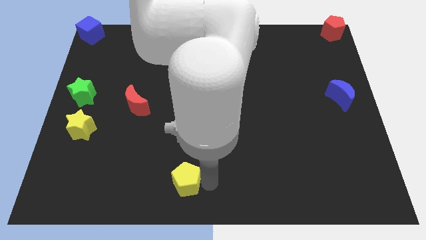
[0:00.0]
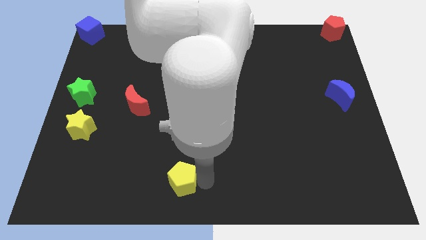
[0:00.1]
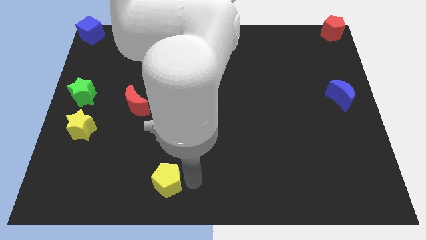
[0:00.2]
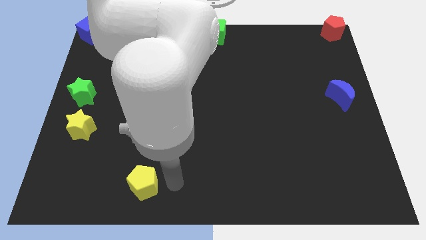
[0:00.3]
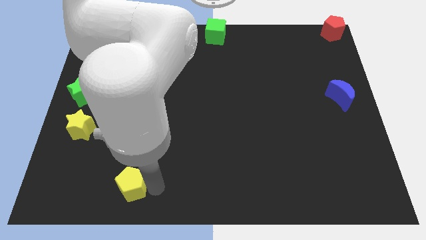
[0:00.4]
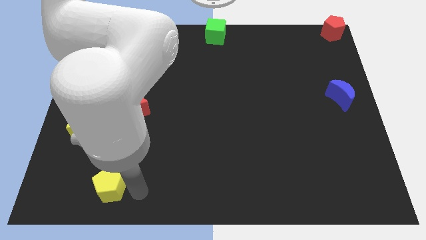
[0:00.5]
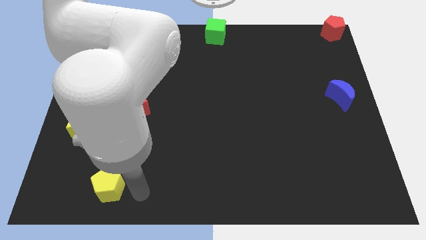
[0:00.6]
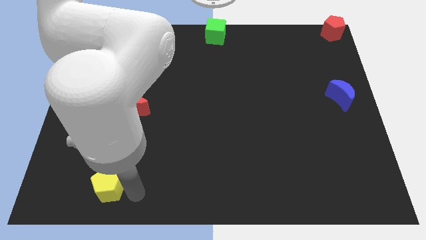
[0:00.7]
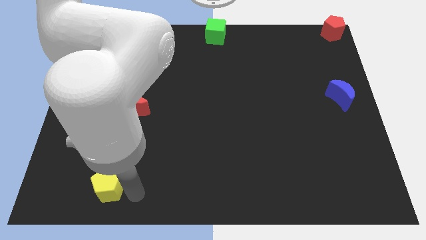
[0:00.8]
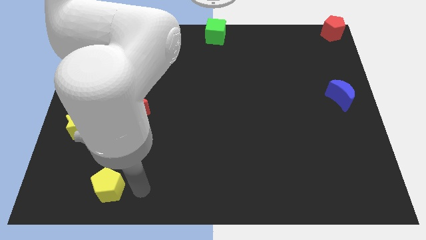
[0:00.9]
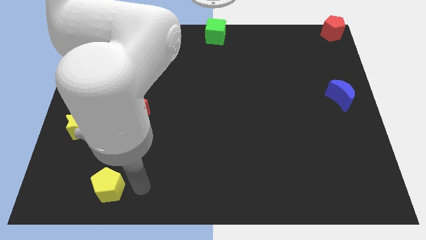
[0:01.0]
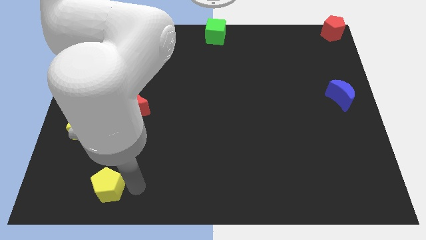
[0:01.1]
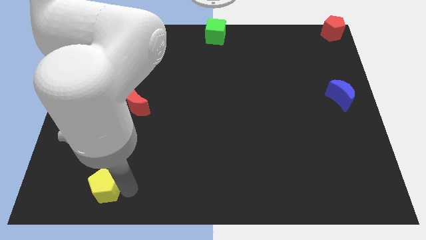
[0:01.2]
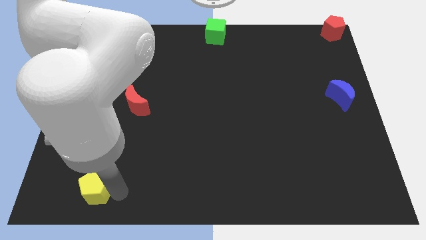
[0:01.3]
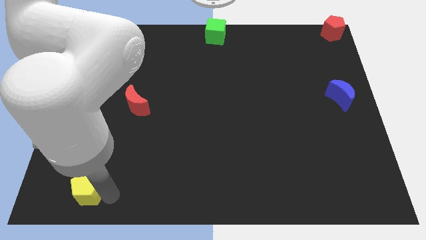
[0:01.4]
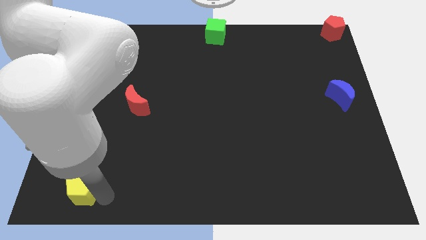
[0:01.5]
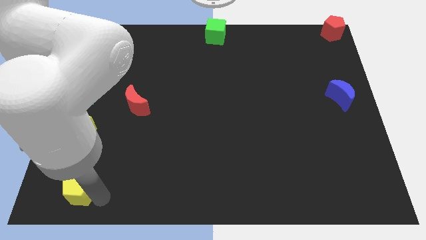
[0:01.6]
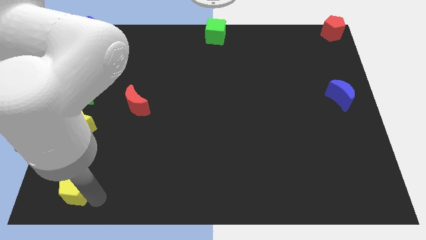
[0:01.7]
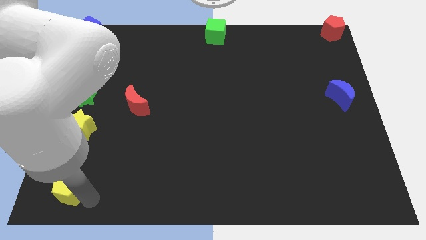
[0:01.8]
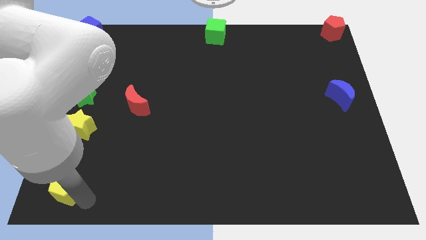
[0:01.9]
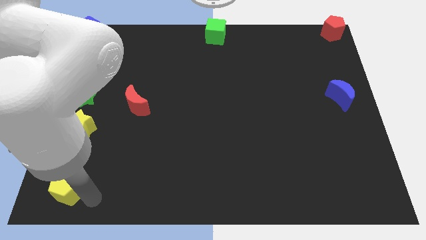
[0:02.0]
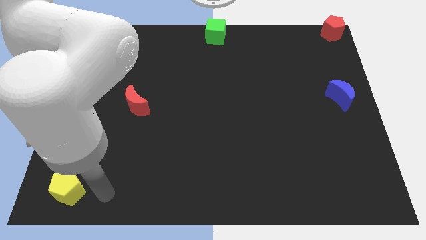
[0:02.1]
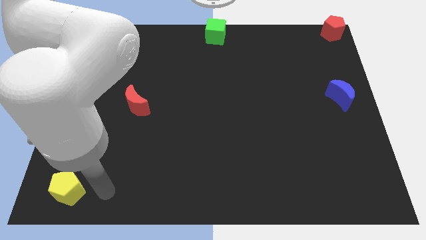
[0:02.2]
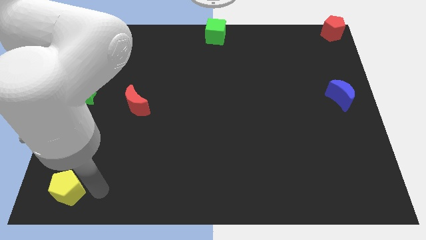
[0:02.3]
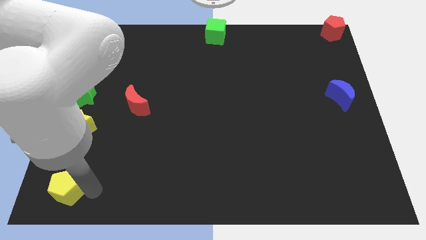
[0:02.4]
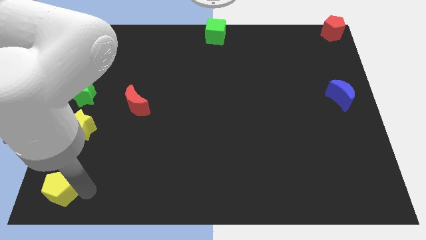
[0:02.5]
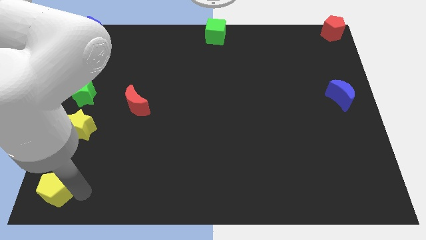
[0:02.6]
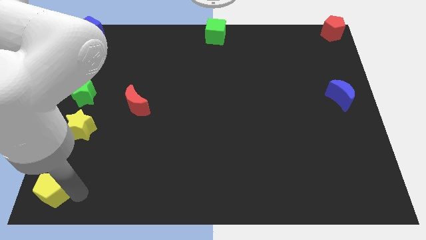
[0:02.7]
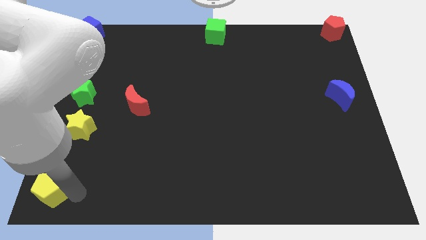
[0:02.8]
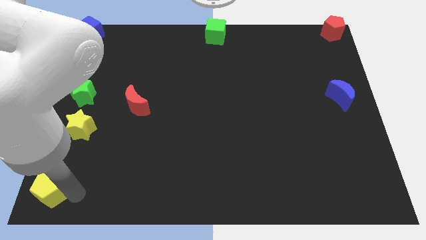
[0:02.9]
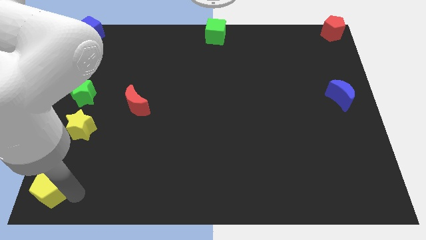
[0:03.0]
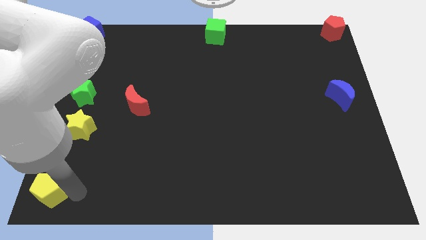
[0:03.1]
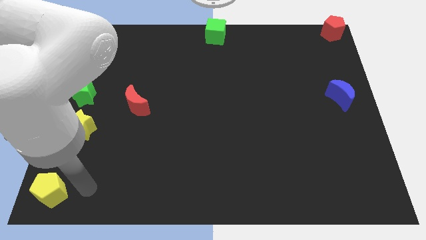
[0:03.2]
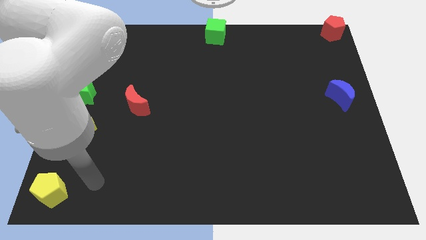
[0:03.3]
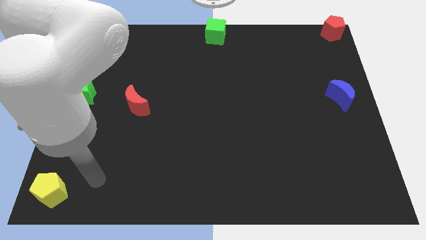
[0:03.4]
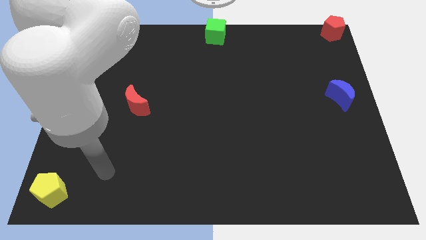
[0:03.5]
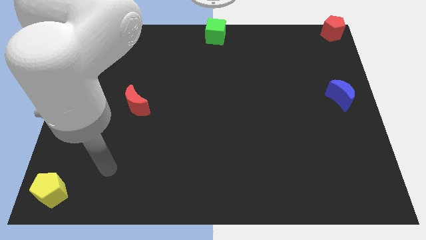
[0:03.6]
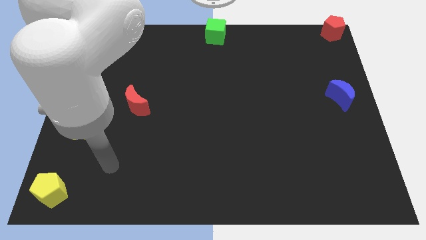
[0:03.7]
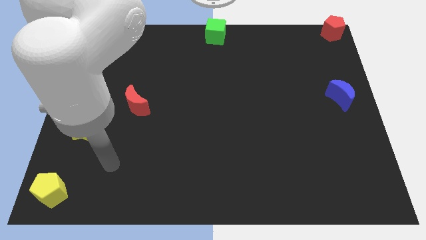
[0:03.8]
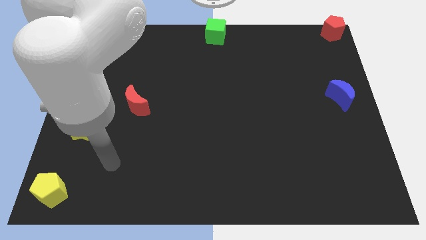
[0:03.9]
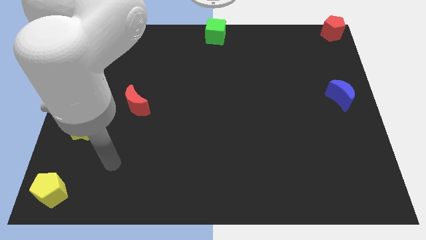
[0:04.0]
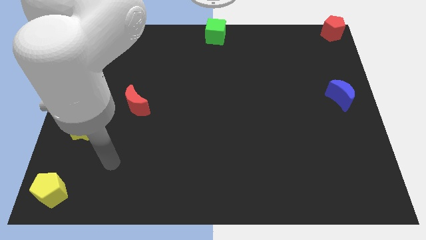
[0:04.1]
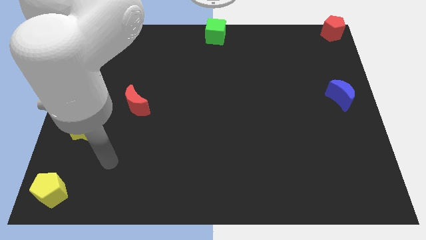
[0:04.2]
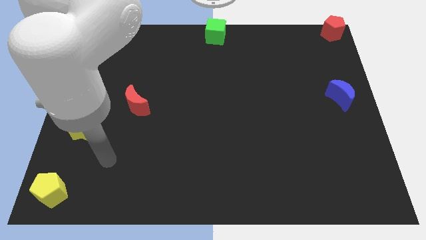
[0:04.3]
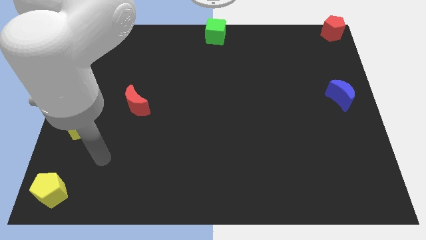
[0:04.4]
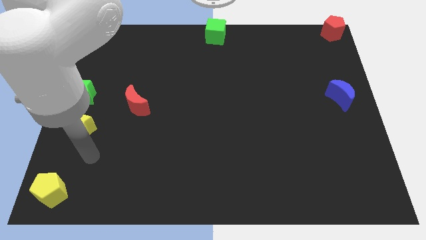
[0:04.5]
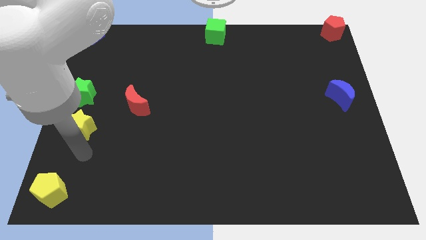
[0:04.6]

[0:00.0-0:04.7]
move the yellow pentagon to the bottom left

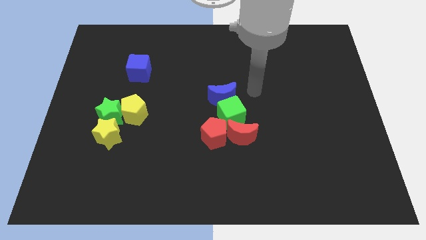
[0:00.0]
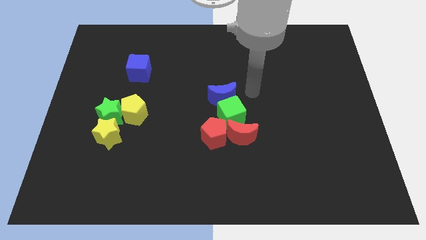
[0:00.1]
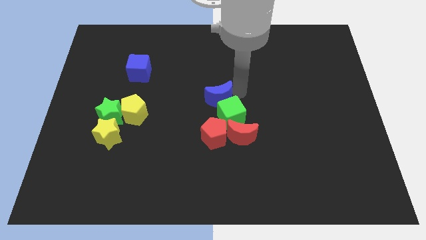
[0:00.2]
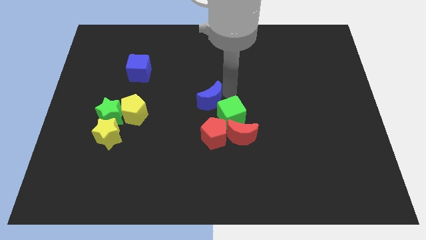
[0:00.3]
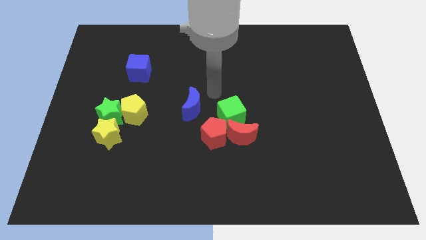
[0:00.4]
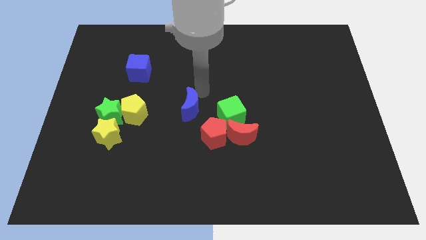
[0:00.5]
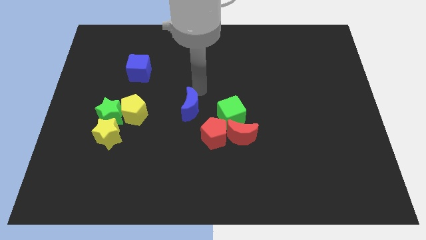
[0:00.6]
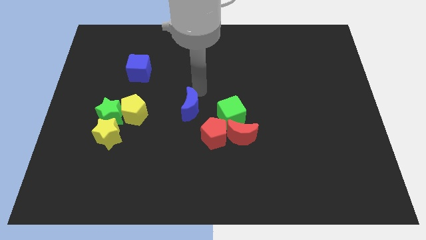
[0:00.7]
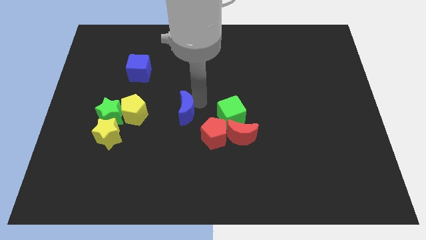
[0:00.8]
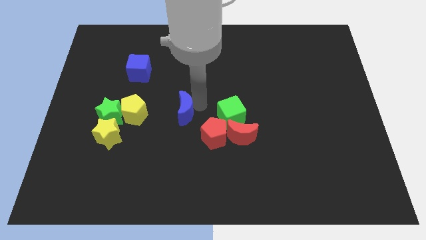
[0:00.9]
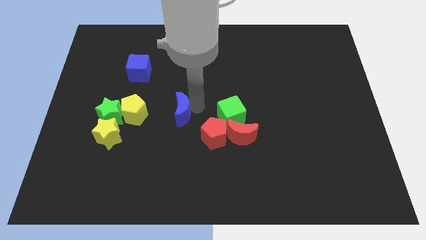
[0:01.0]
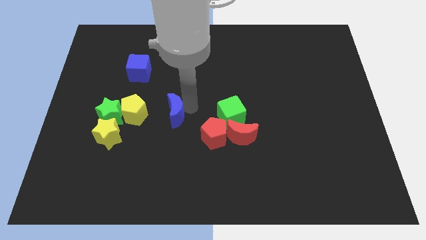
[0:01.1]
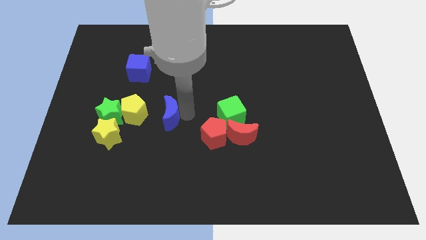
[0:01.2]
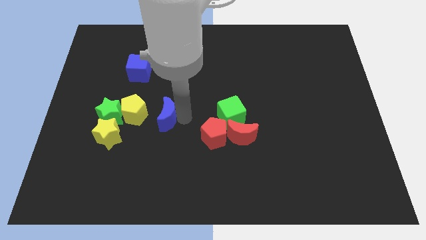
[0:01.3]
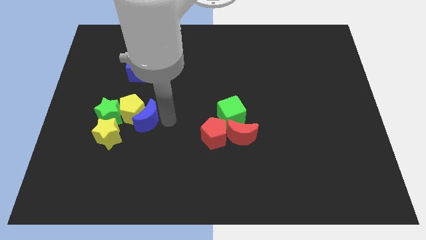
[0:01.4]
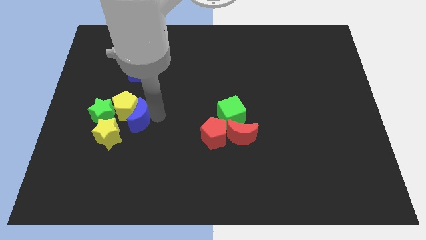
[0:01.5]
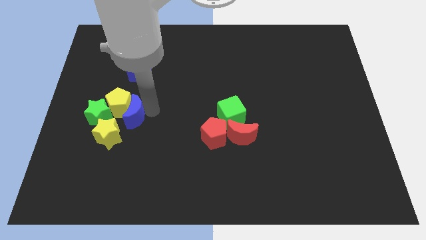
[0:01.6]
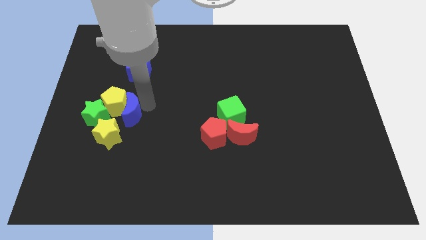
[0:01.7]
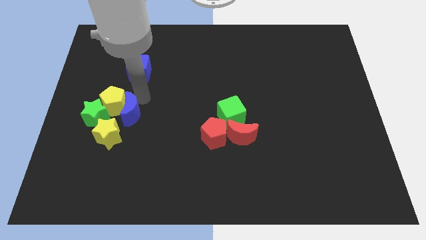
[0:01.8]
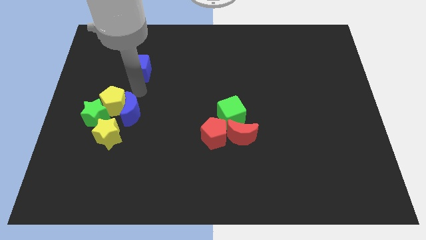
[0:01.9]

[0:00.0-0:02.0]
push the blue moon into the yellow pentagon

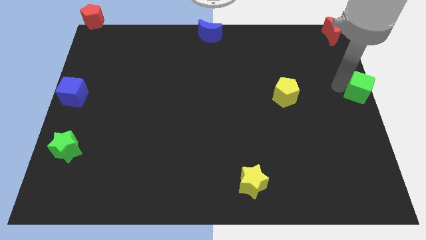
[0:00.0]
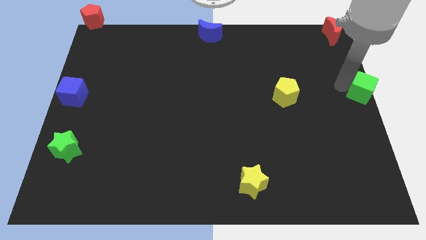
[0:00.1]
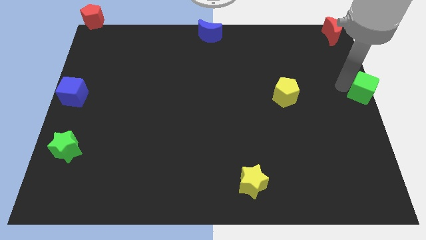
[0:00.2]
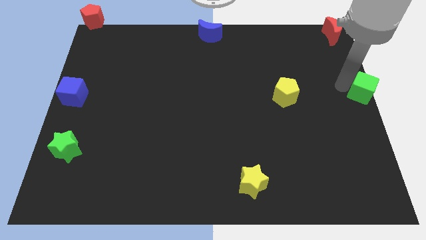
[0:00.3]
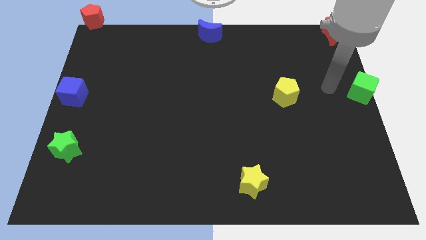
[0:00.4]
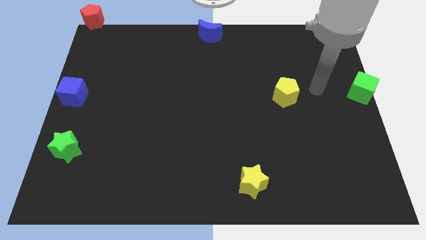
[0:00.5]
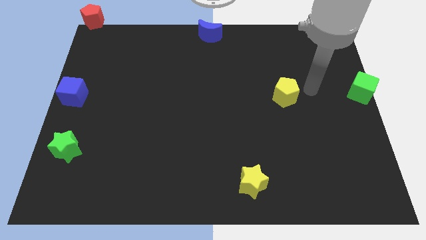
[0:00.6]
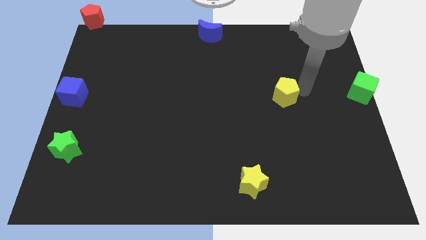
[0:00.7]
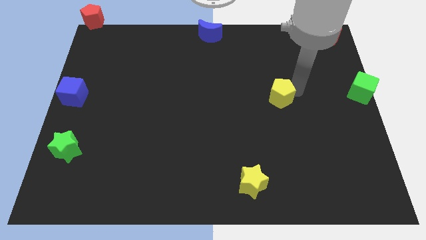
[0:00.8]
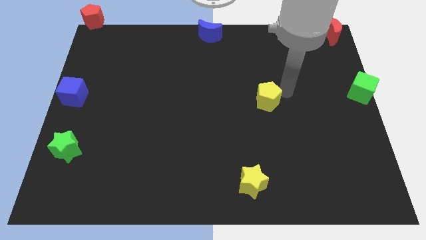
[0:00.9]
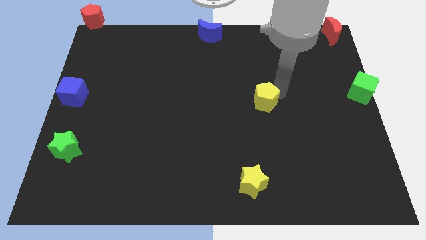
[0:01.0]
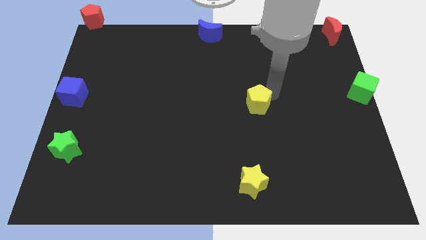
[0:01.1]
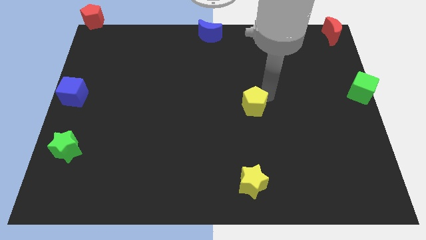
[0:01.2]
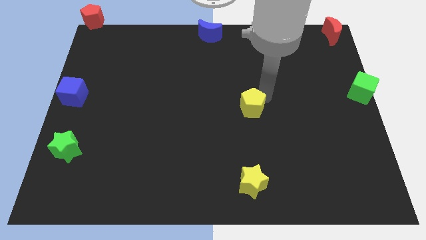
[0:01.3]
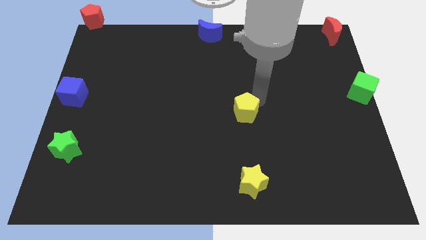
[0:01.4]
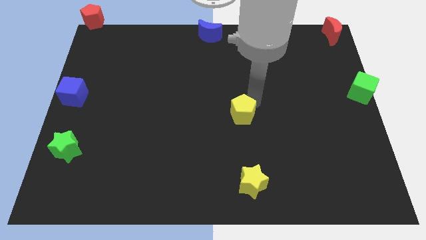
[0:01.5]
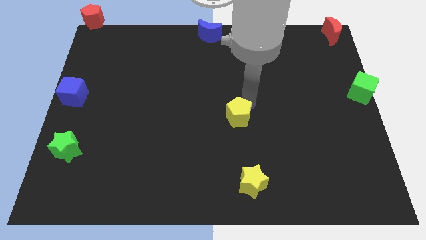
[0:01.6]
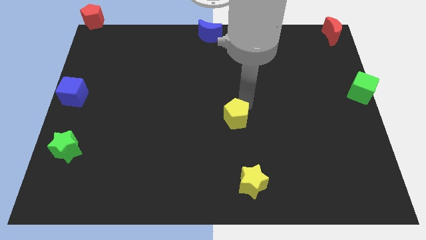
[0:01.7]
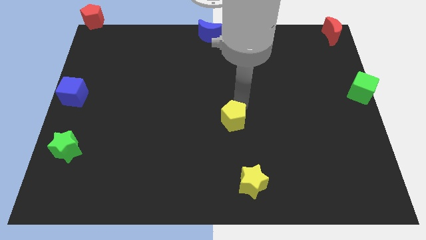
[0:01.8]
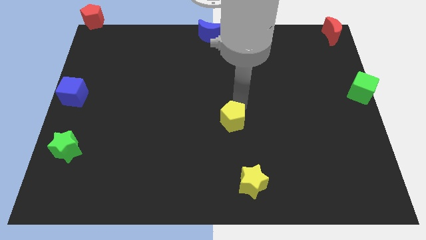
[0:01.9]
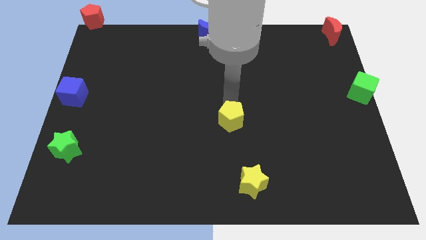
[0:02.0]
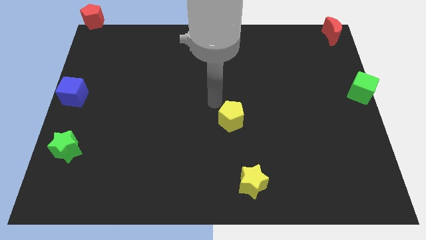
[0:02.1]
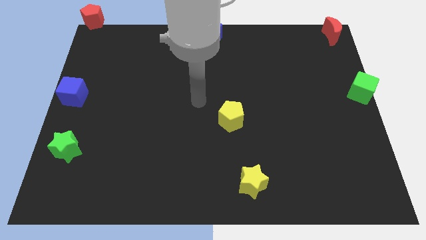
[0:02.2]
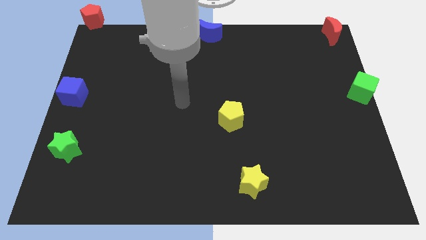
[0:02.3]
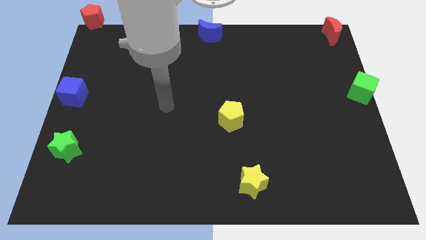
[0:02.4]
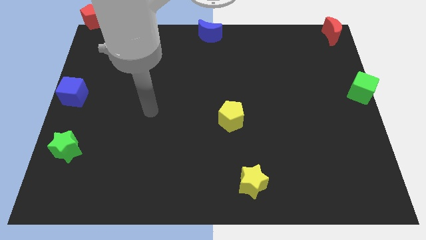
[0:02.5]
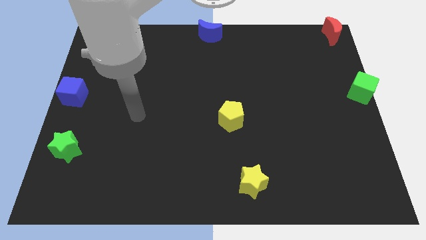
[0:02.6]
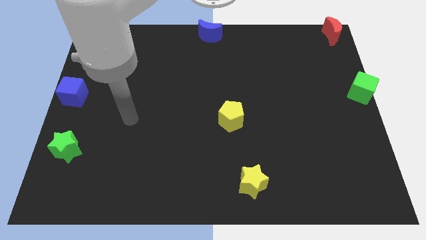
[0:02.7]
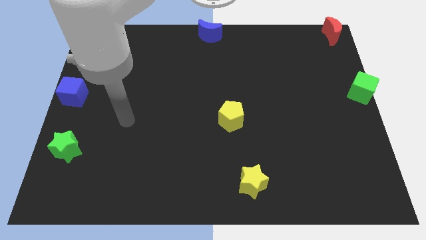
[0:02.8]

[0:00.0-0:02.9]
place yellow pentagon above yellow star
